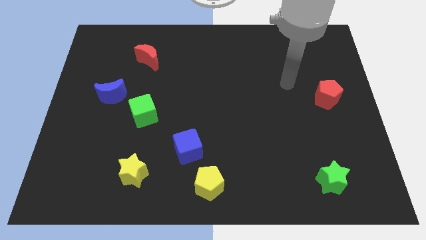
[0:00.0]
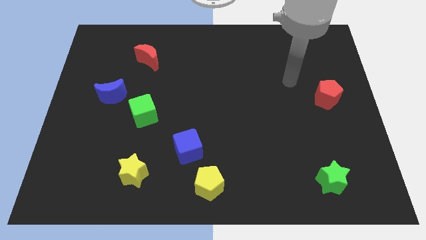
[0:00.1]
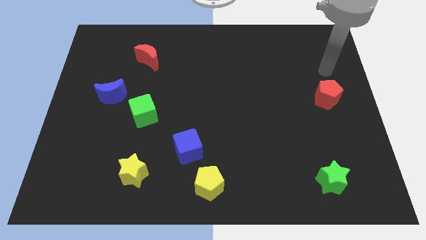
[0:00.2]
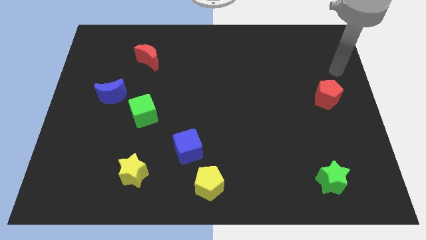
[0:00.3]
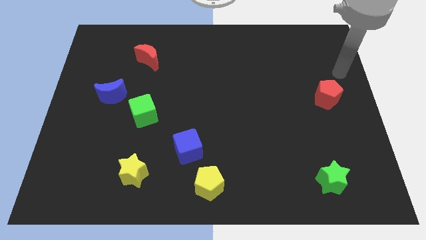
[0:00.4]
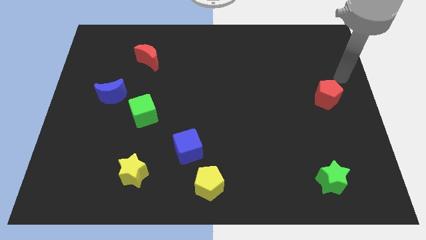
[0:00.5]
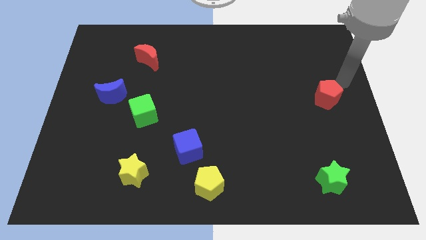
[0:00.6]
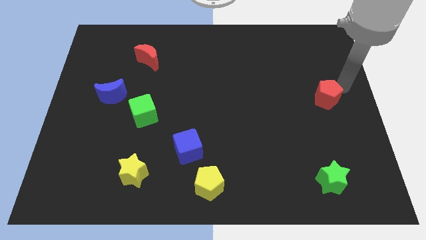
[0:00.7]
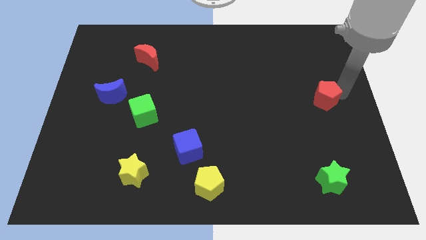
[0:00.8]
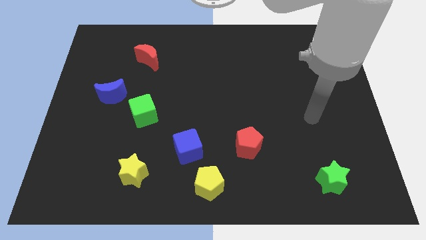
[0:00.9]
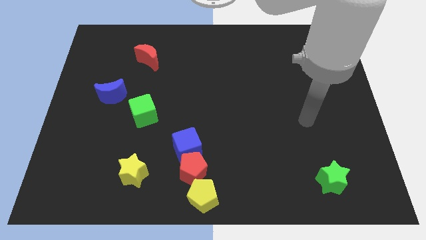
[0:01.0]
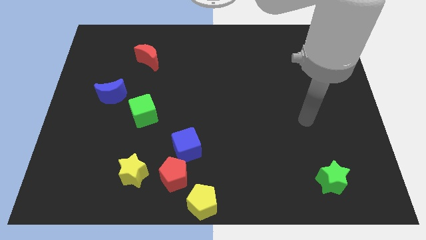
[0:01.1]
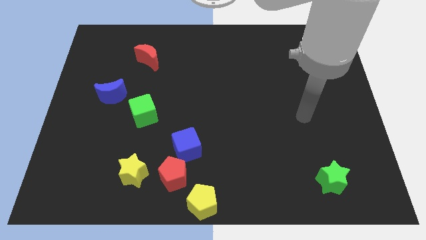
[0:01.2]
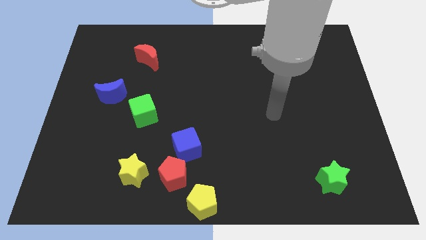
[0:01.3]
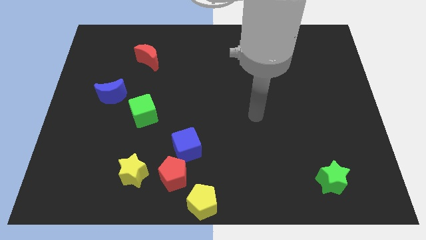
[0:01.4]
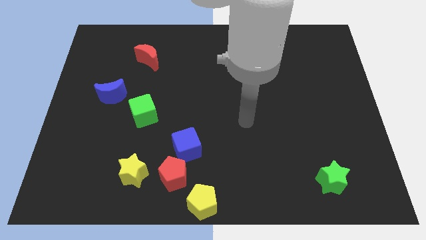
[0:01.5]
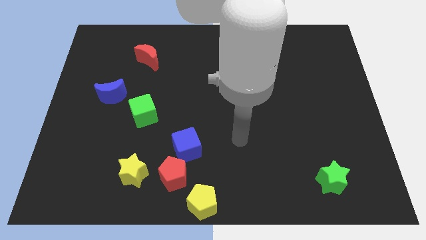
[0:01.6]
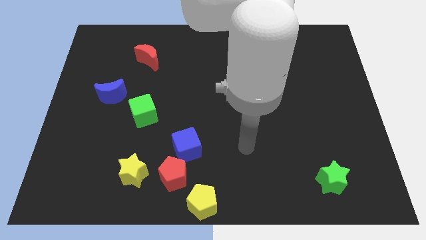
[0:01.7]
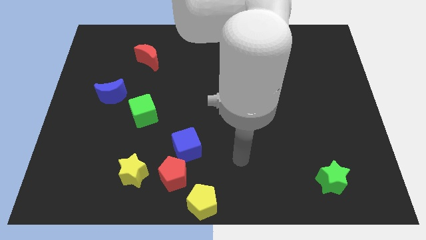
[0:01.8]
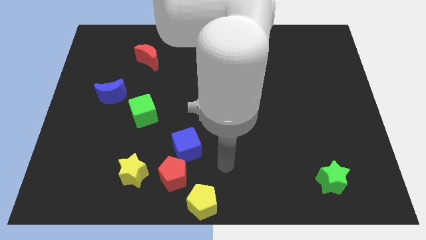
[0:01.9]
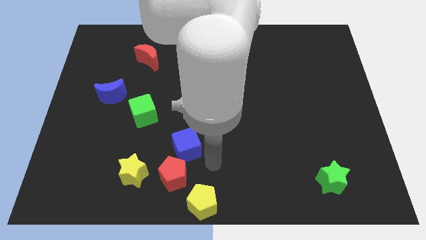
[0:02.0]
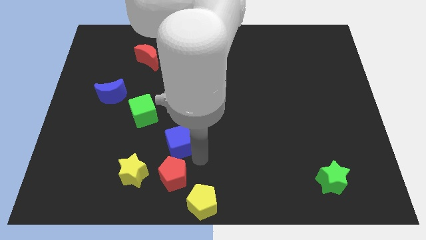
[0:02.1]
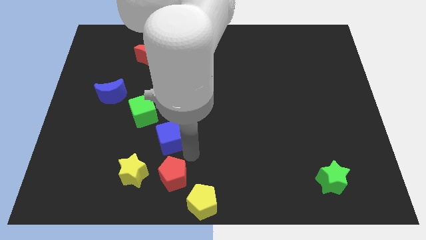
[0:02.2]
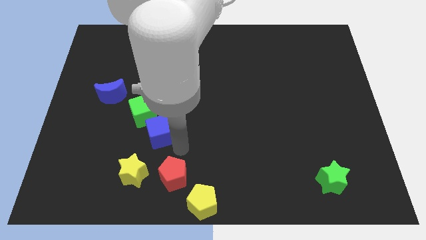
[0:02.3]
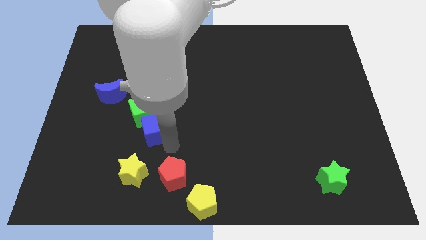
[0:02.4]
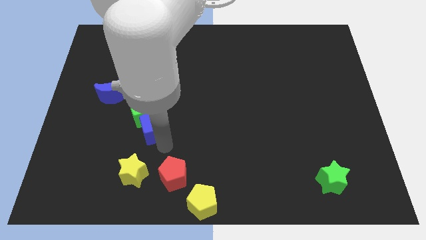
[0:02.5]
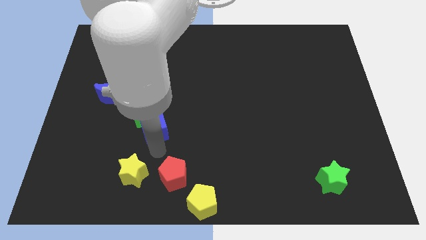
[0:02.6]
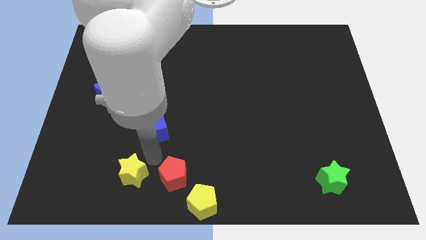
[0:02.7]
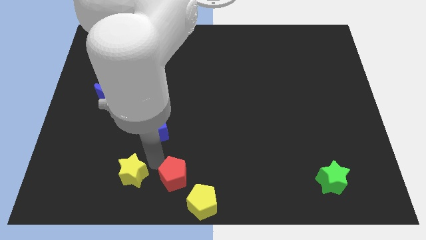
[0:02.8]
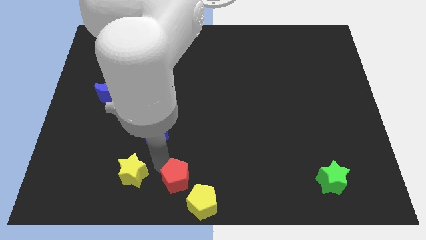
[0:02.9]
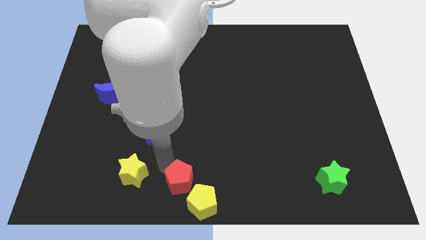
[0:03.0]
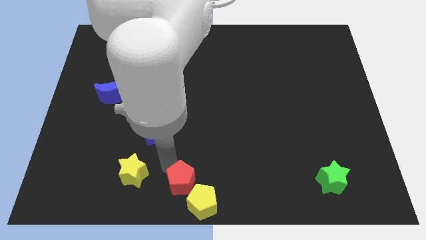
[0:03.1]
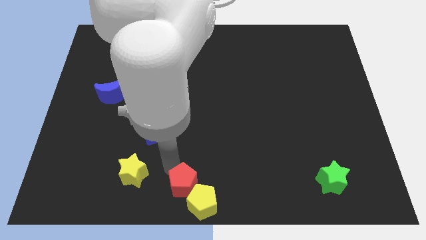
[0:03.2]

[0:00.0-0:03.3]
put the red pentagon to the yellow pentagon

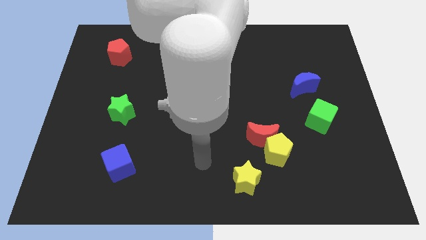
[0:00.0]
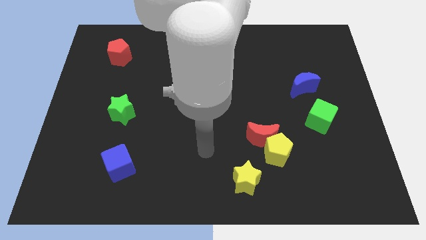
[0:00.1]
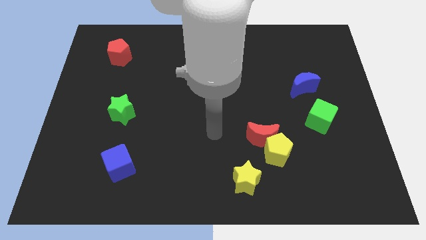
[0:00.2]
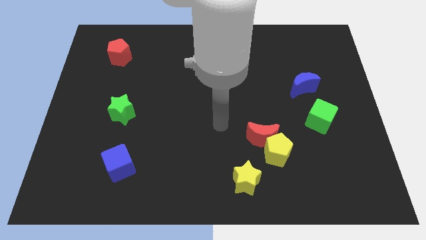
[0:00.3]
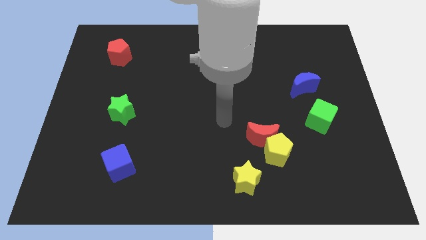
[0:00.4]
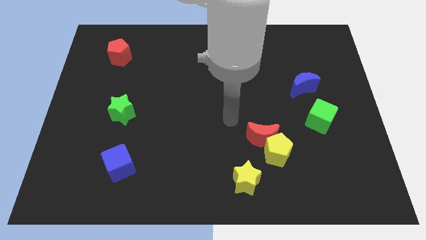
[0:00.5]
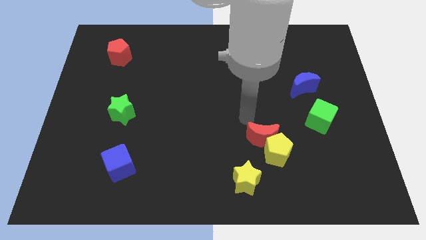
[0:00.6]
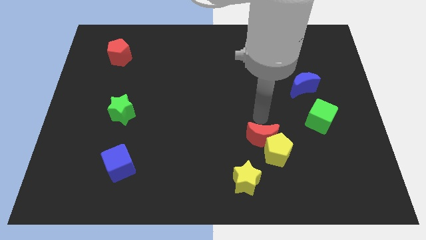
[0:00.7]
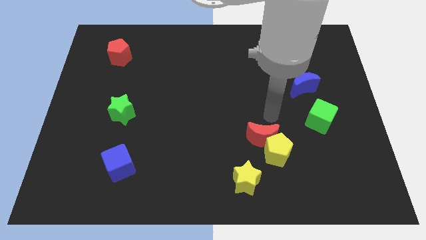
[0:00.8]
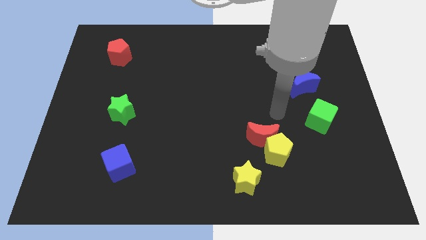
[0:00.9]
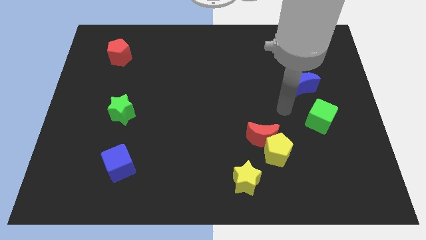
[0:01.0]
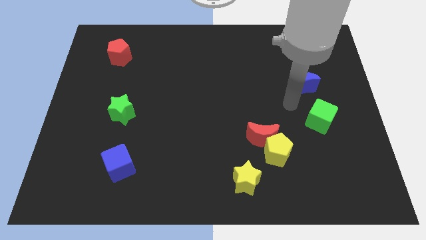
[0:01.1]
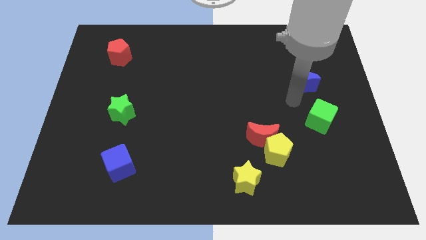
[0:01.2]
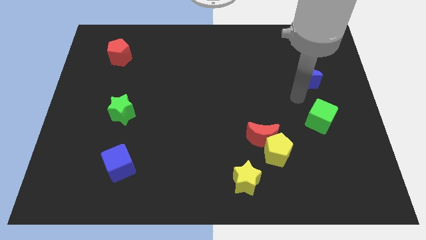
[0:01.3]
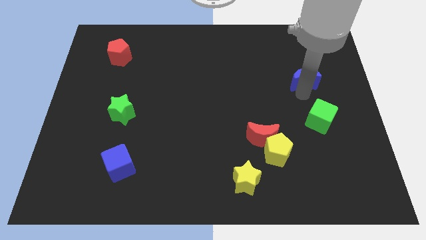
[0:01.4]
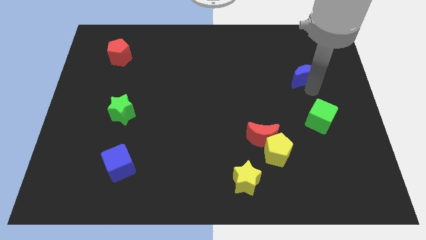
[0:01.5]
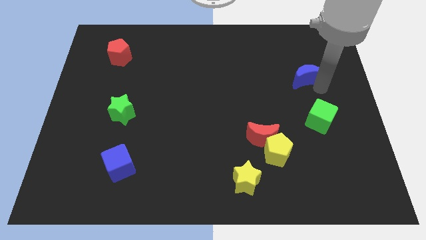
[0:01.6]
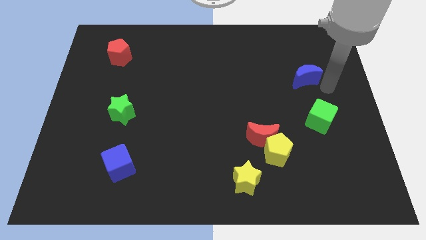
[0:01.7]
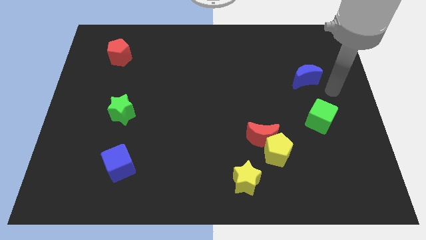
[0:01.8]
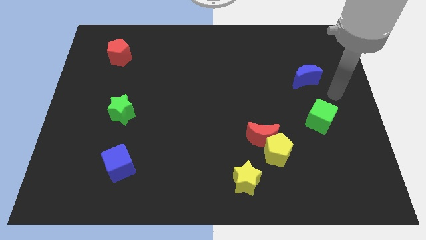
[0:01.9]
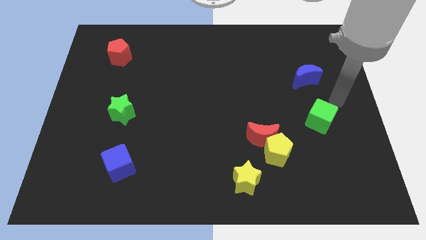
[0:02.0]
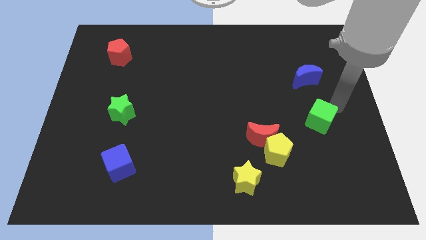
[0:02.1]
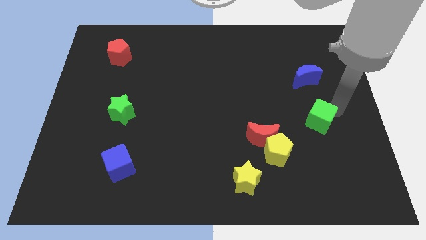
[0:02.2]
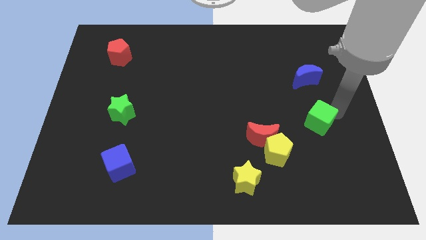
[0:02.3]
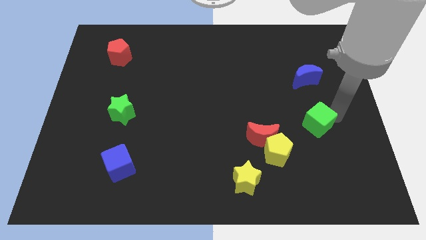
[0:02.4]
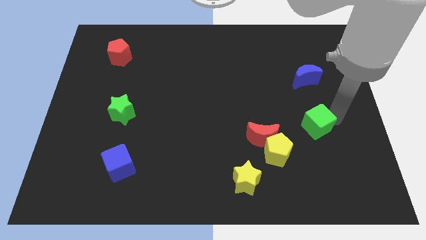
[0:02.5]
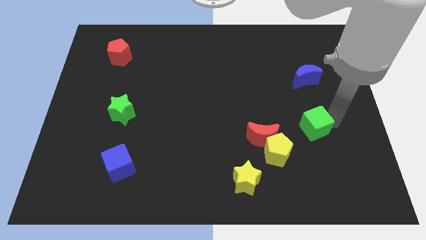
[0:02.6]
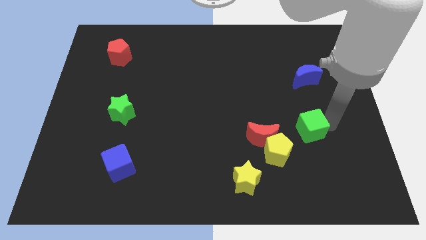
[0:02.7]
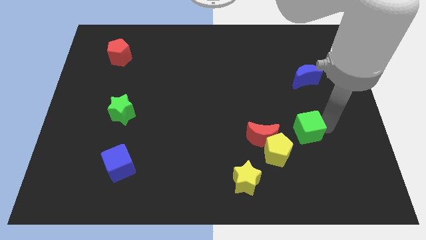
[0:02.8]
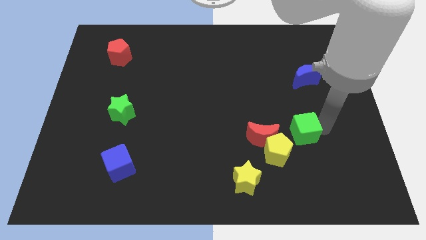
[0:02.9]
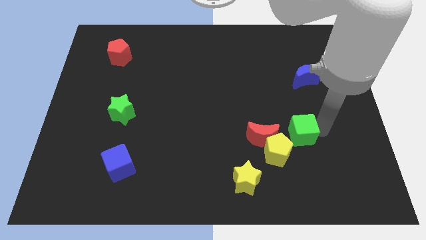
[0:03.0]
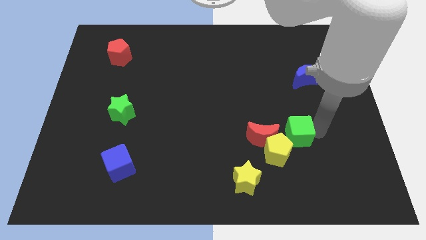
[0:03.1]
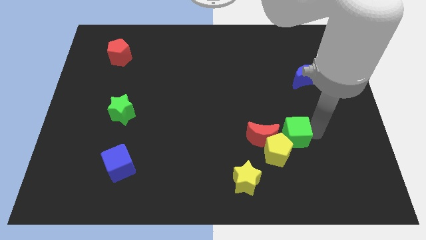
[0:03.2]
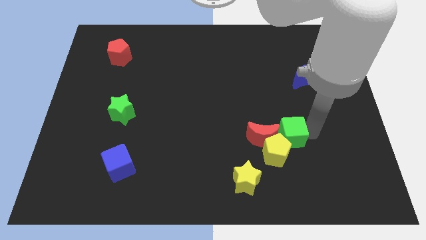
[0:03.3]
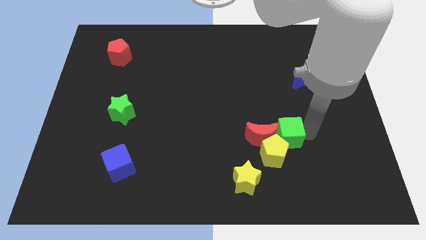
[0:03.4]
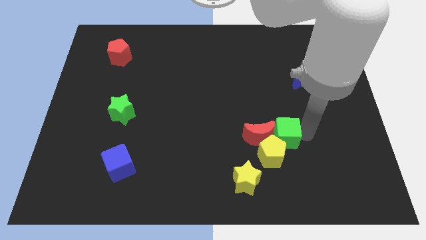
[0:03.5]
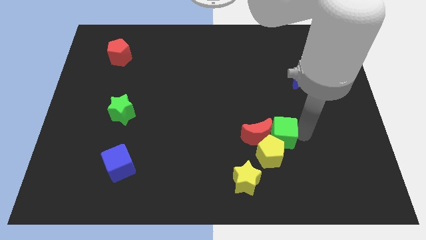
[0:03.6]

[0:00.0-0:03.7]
push the green cube close to the red moon

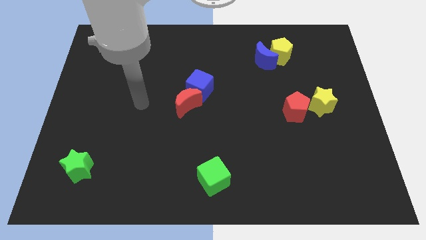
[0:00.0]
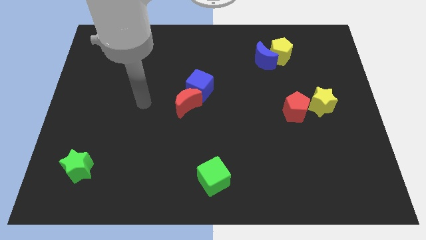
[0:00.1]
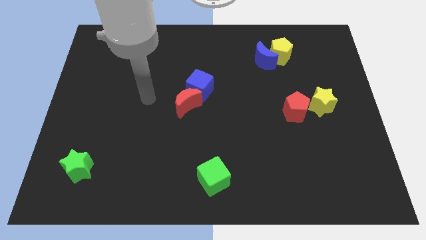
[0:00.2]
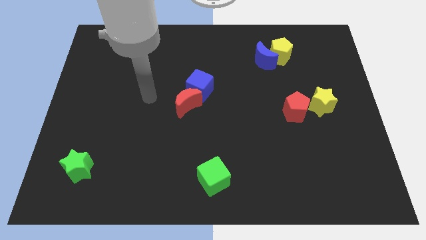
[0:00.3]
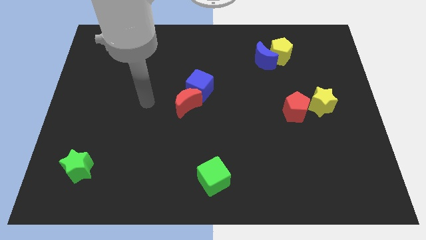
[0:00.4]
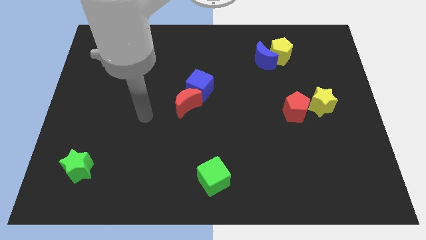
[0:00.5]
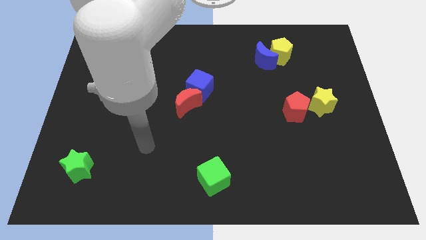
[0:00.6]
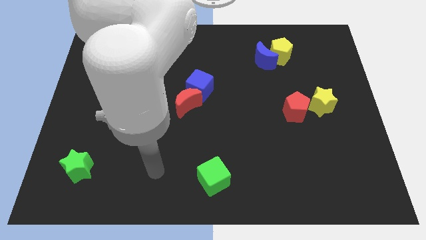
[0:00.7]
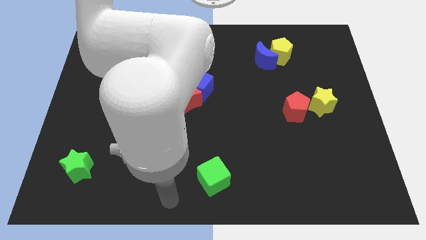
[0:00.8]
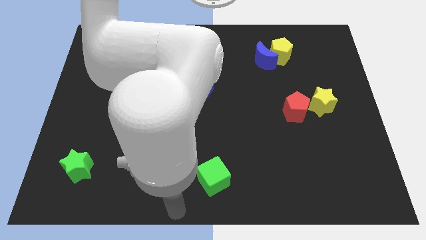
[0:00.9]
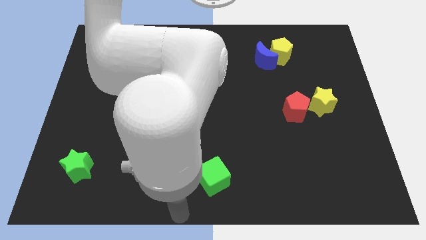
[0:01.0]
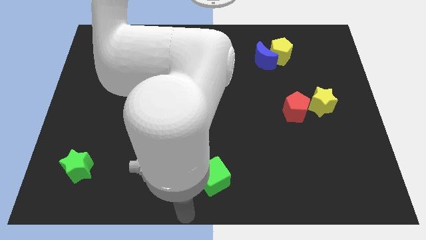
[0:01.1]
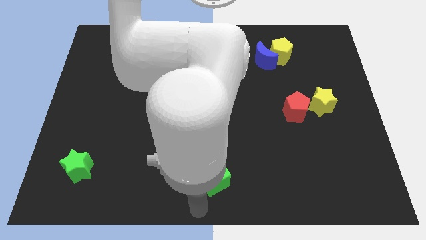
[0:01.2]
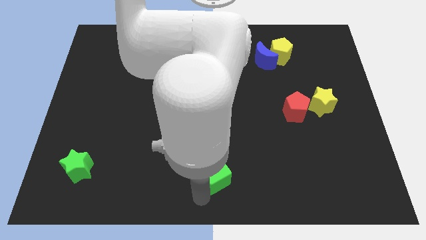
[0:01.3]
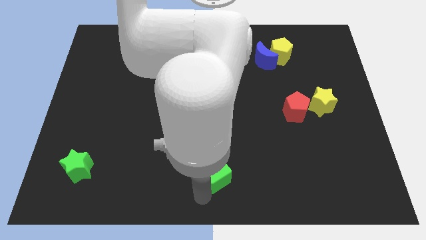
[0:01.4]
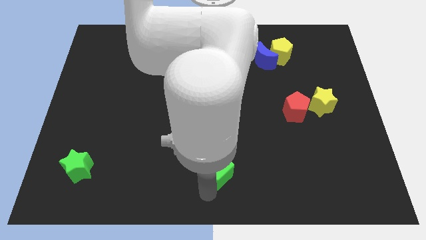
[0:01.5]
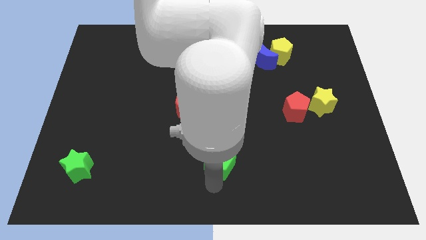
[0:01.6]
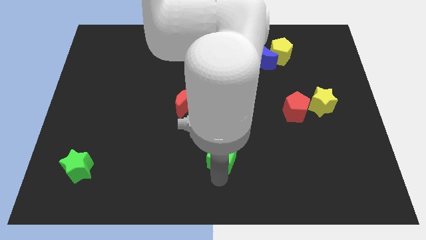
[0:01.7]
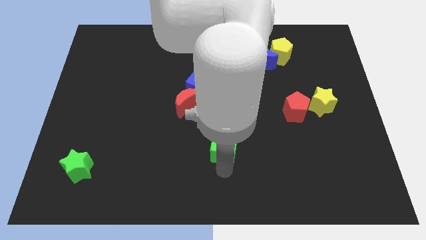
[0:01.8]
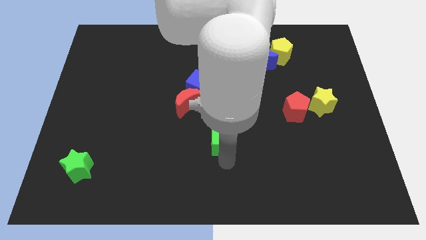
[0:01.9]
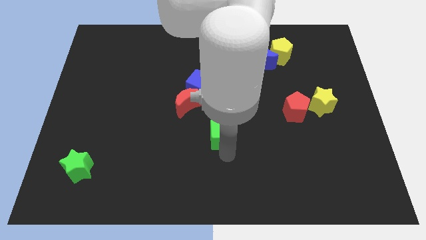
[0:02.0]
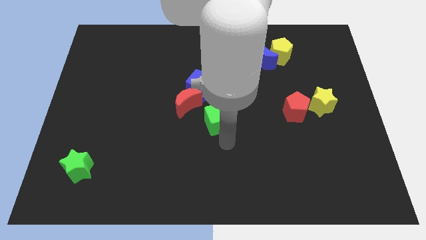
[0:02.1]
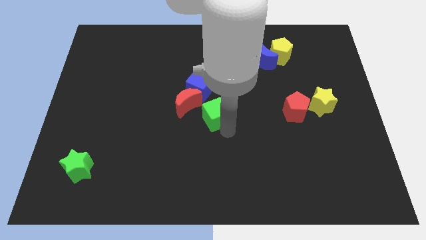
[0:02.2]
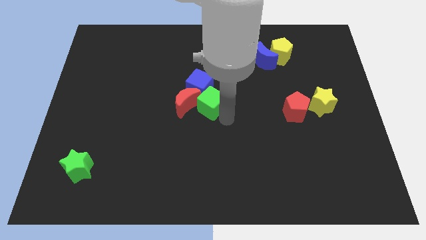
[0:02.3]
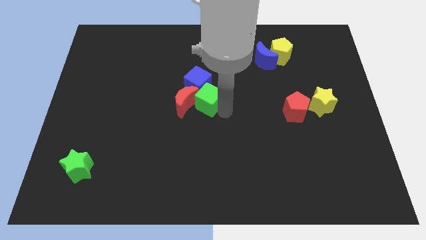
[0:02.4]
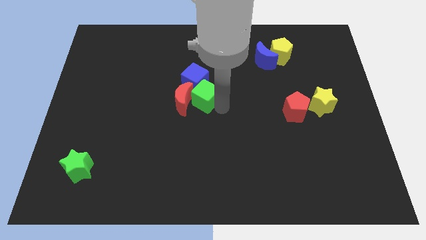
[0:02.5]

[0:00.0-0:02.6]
push the green cube to the blue cube
